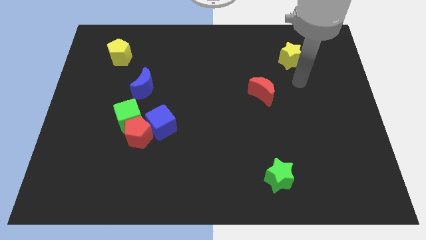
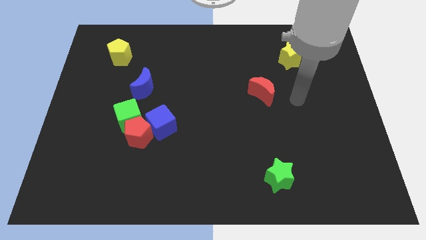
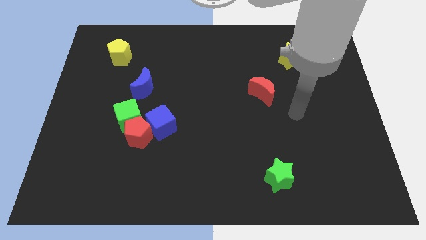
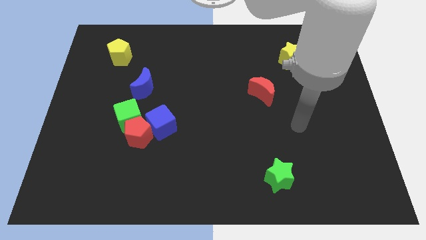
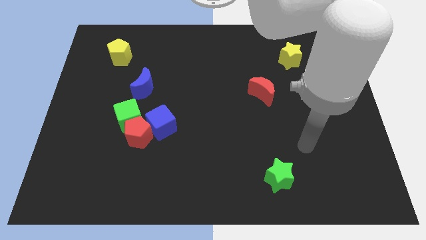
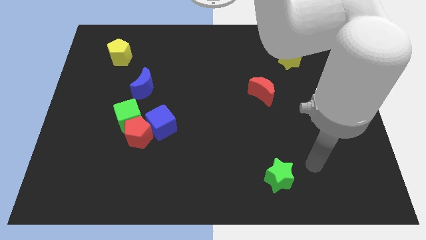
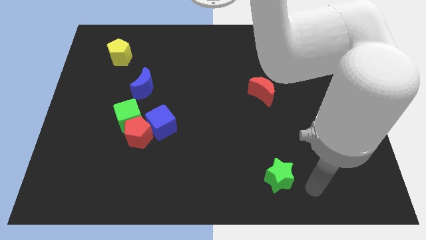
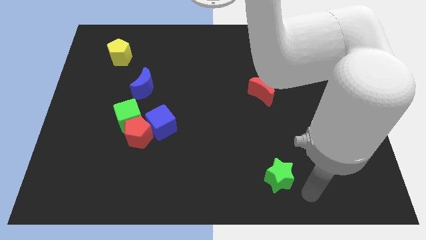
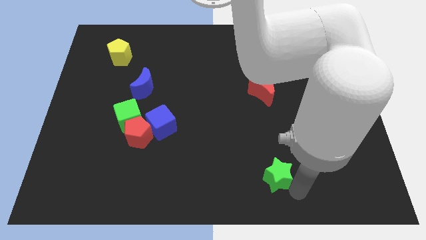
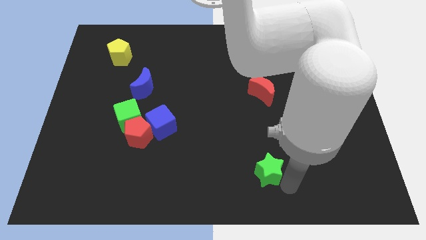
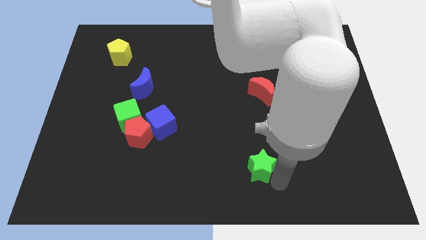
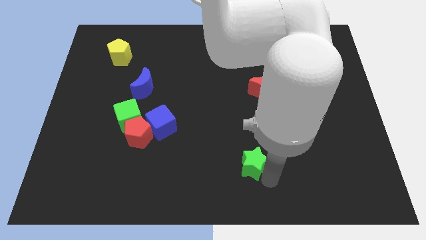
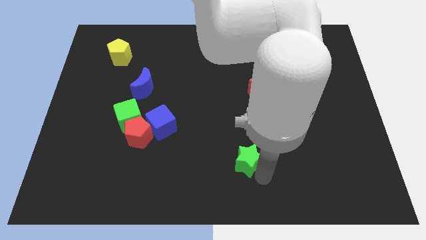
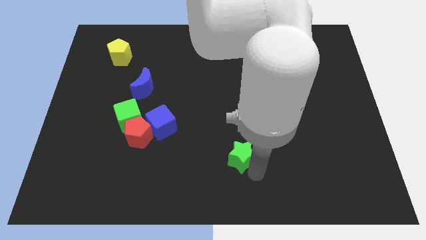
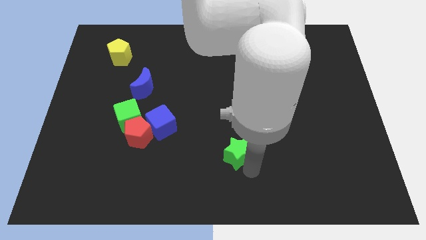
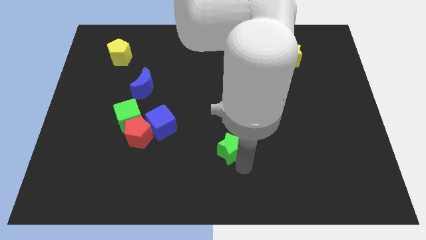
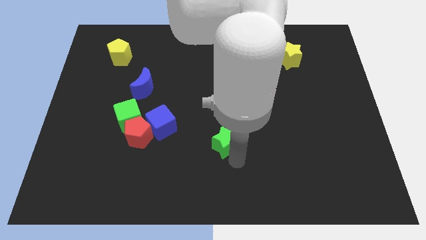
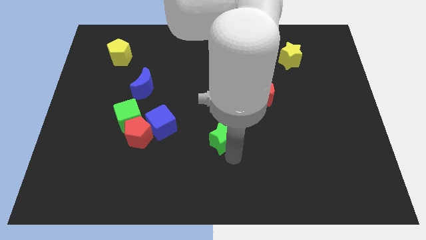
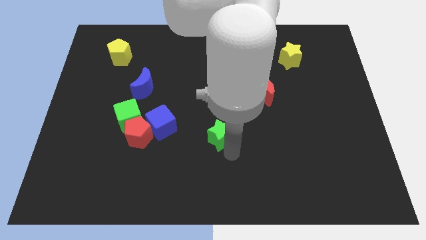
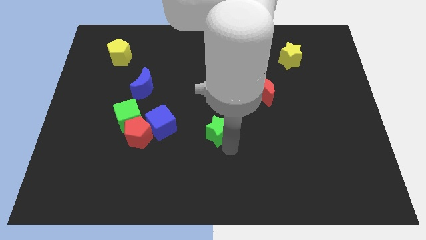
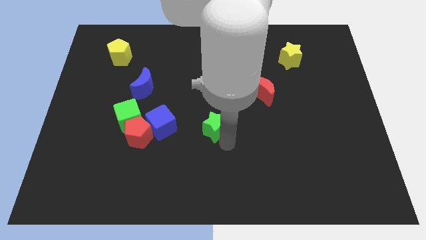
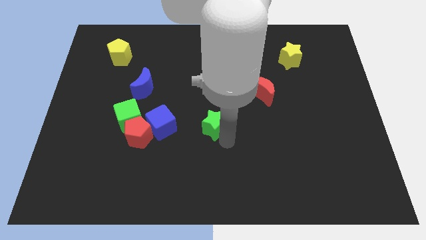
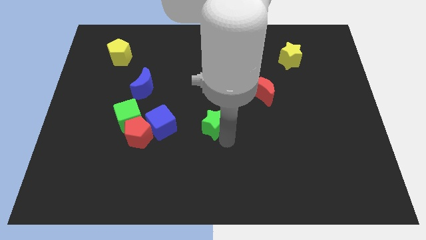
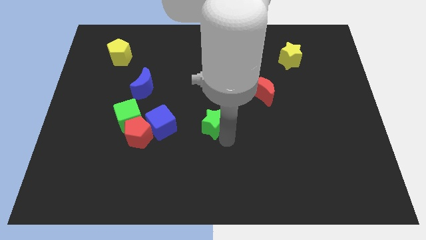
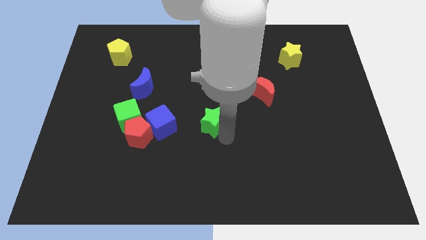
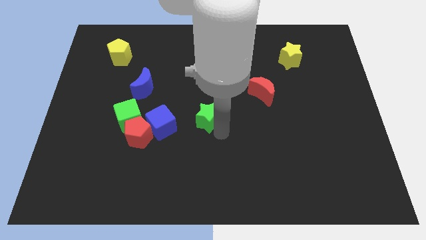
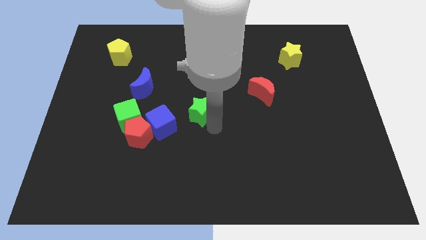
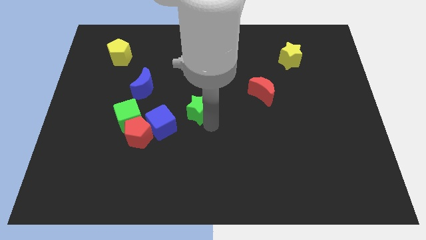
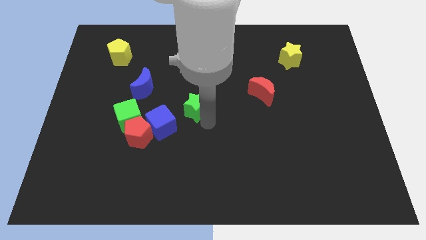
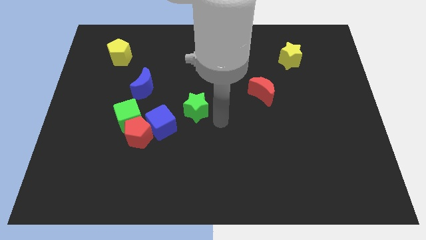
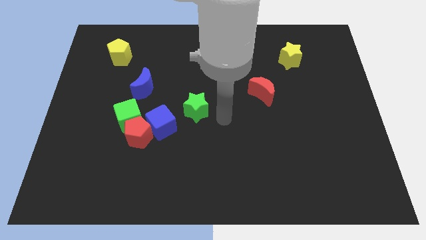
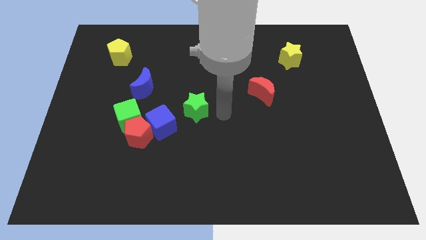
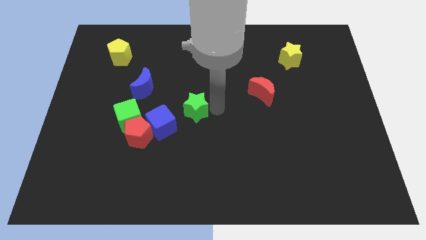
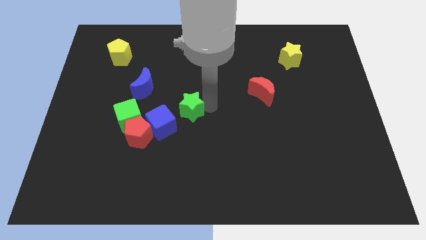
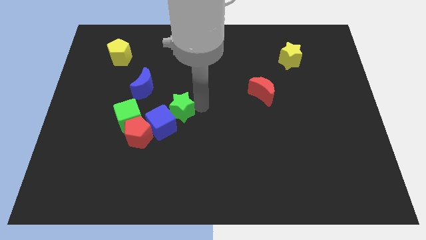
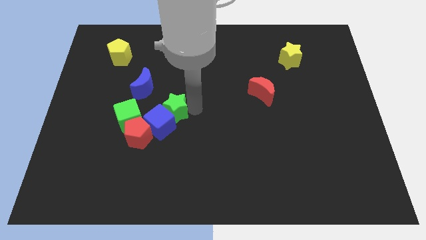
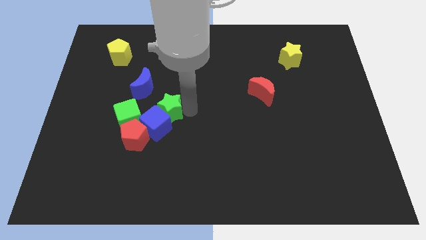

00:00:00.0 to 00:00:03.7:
push the green star towards the blue cube

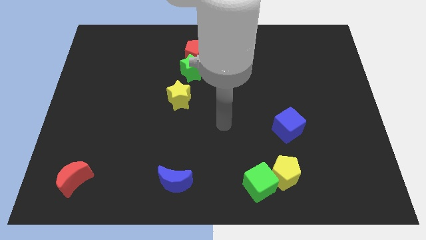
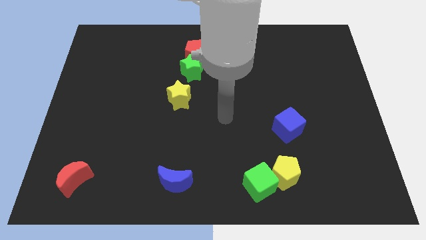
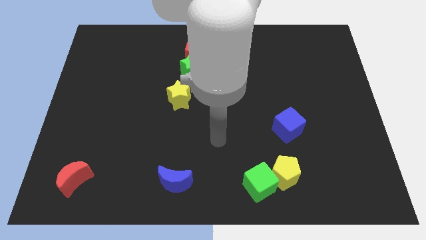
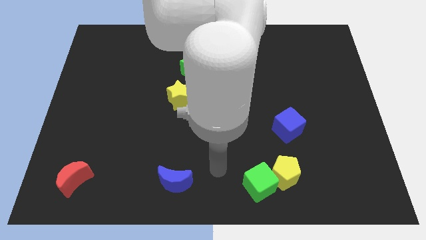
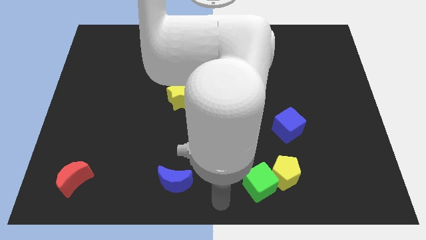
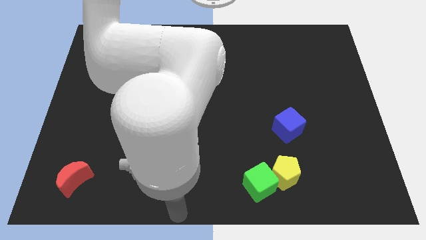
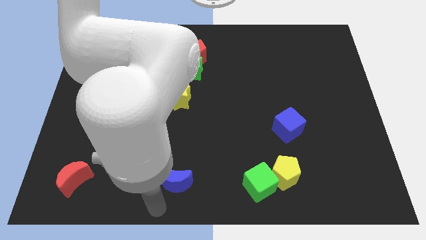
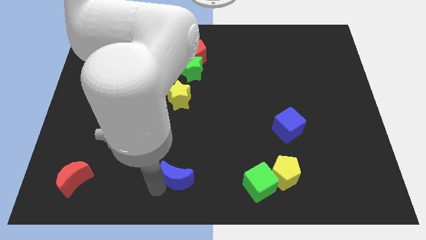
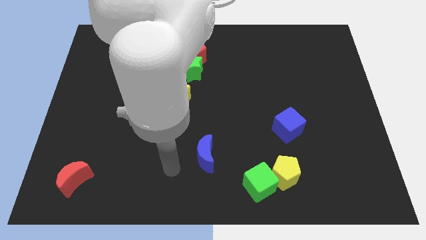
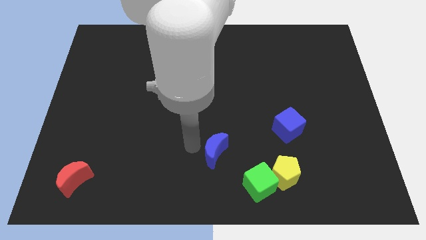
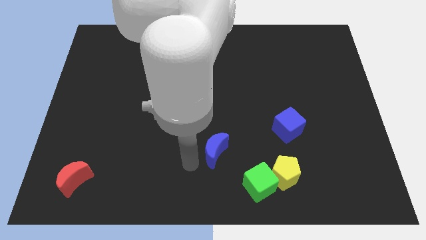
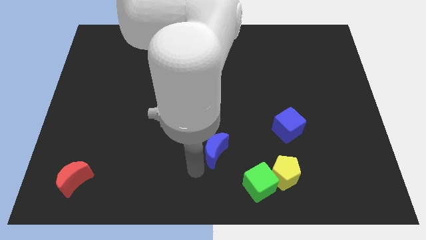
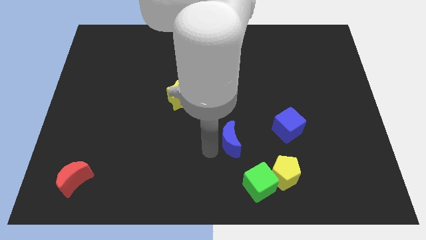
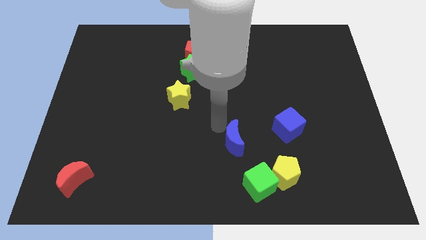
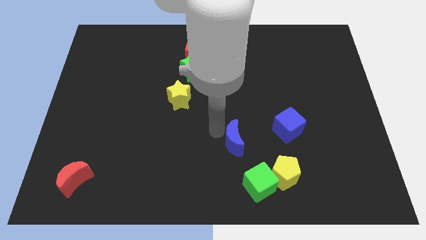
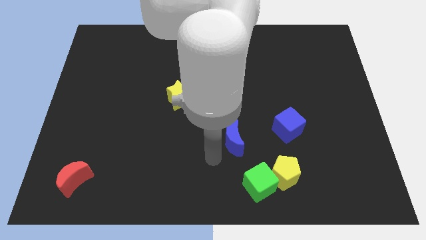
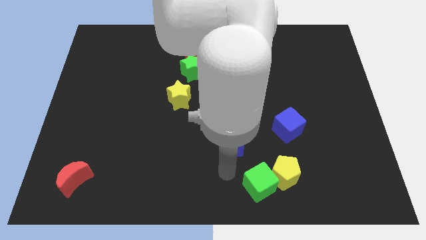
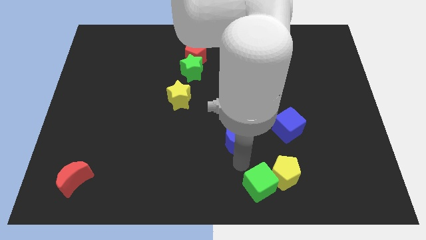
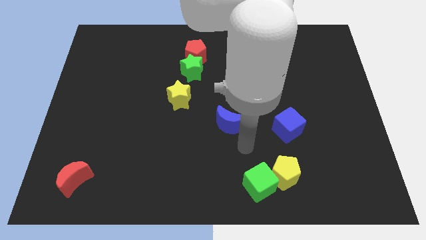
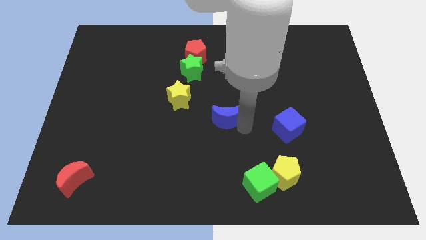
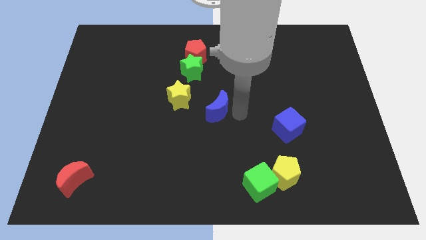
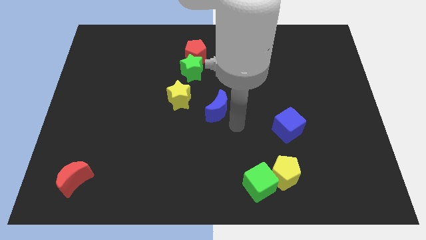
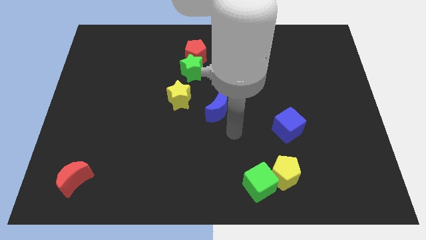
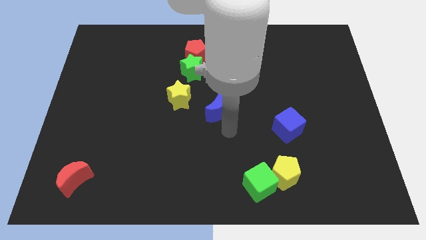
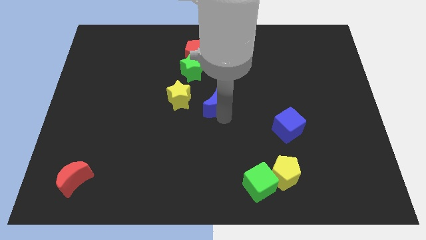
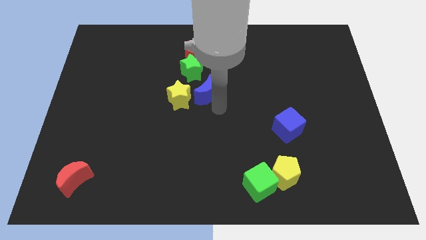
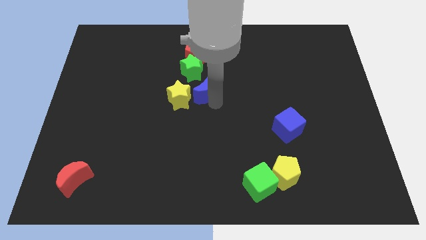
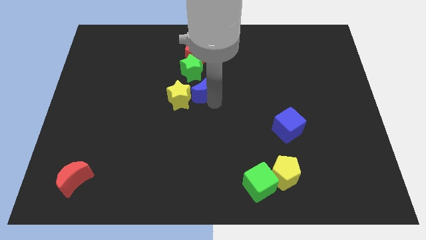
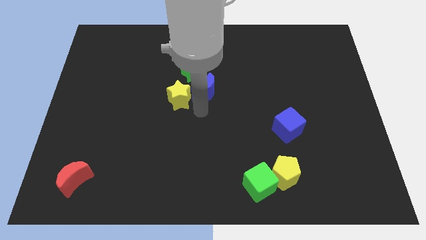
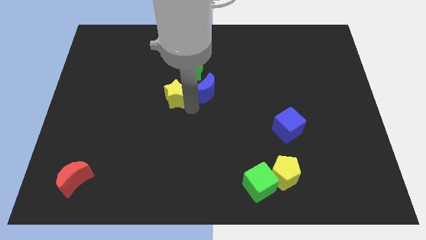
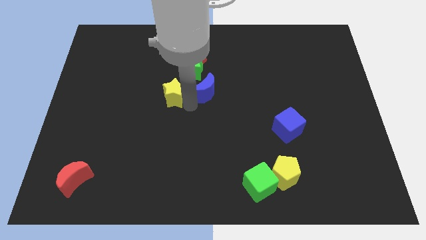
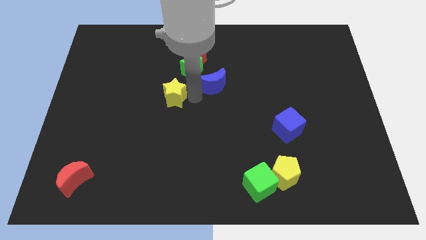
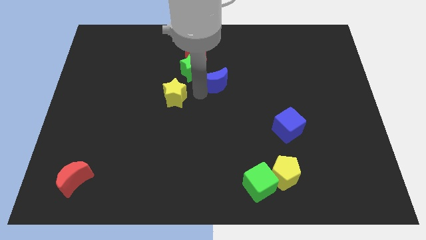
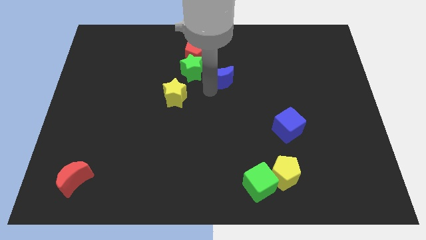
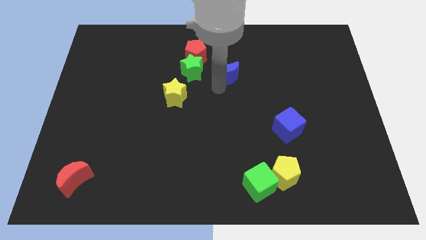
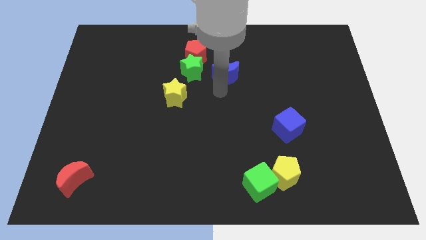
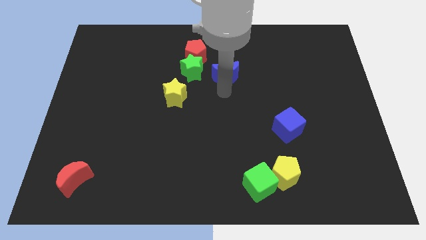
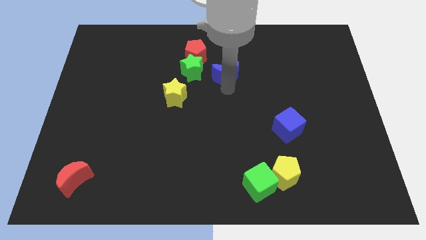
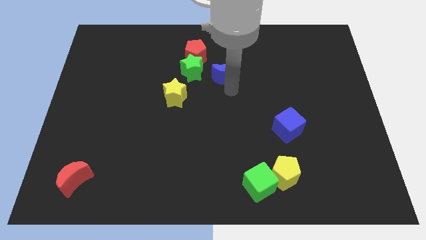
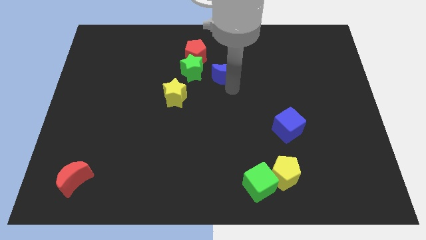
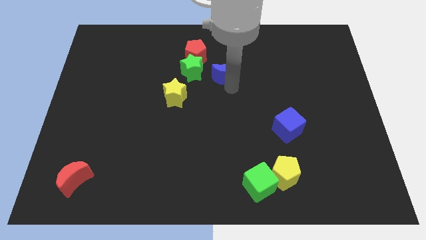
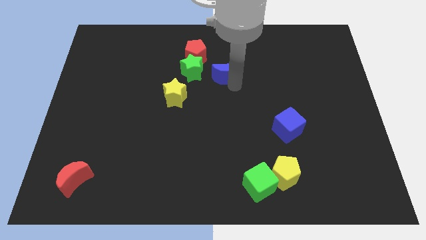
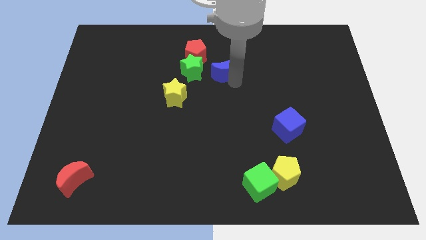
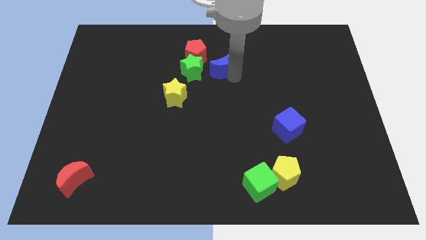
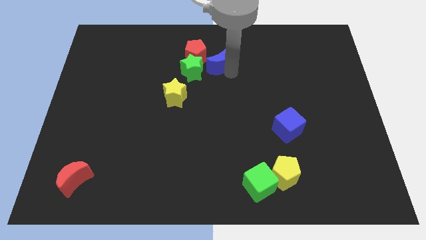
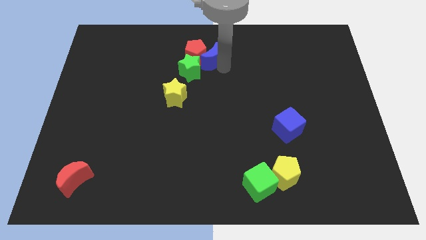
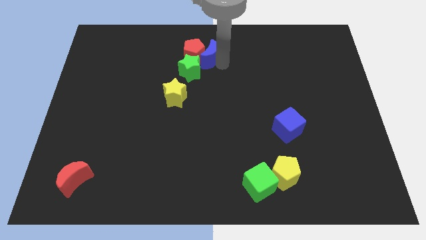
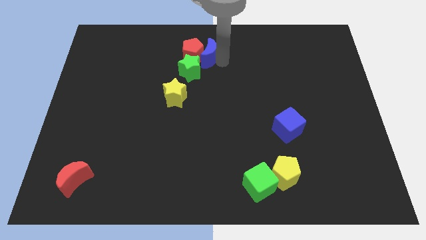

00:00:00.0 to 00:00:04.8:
slide the blue moon towards the red pentagon
